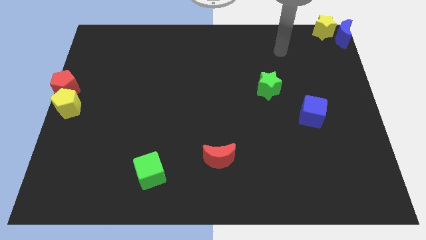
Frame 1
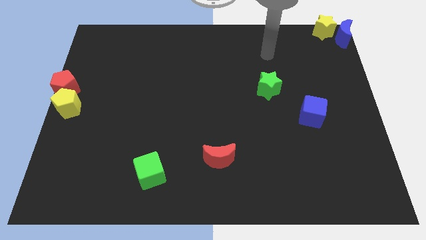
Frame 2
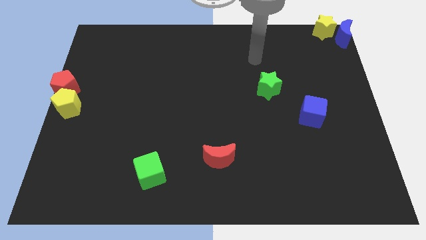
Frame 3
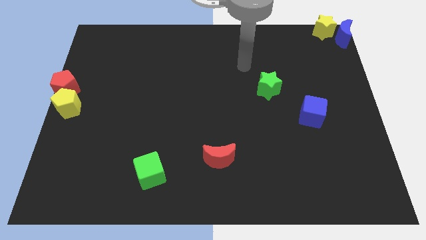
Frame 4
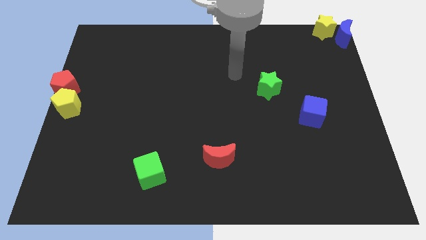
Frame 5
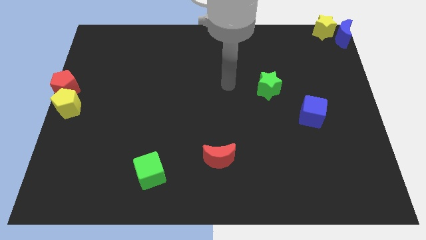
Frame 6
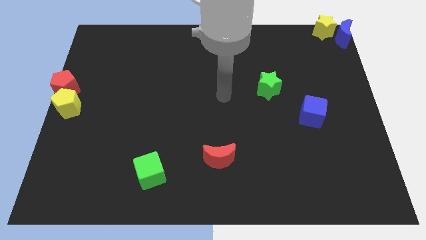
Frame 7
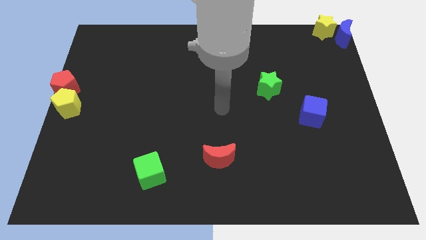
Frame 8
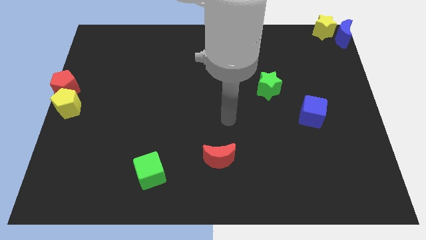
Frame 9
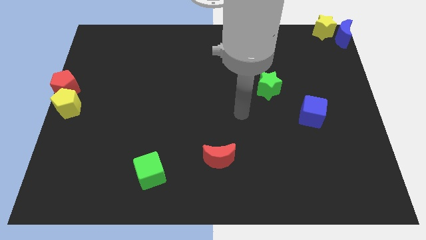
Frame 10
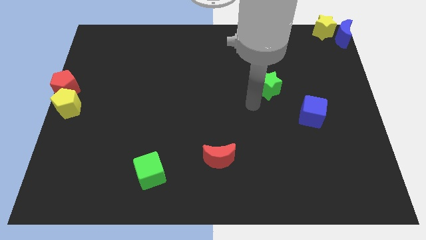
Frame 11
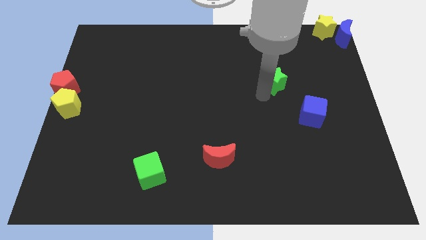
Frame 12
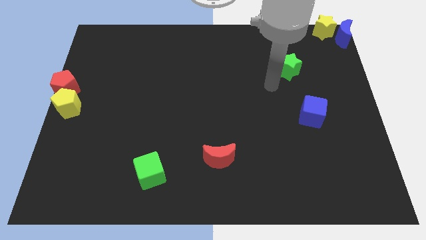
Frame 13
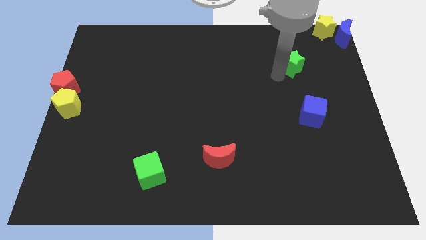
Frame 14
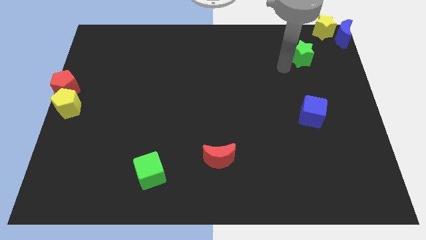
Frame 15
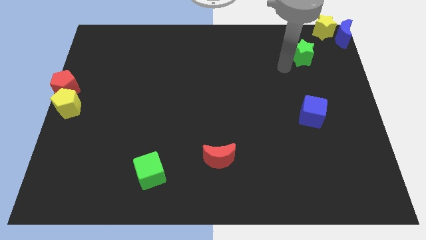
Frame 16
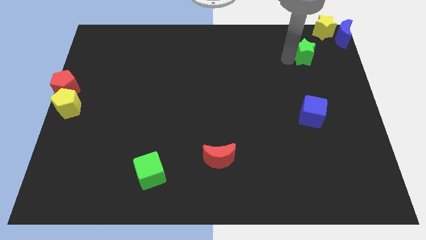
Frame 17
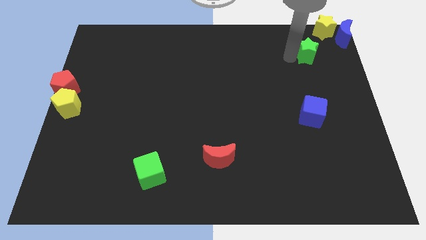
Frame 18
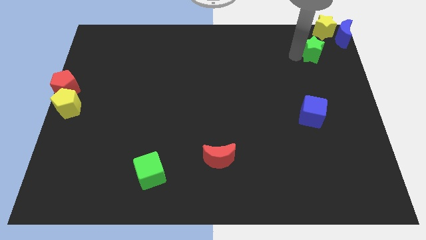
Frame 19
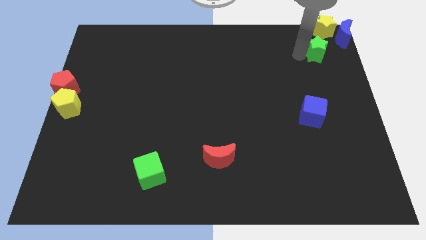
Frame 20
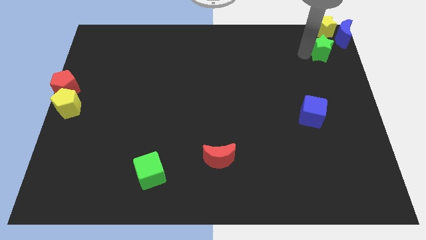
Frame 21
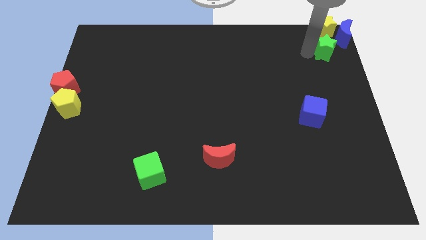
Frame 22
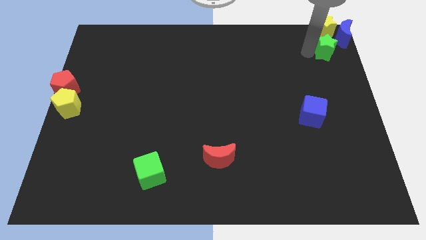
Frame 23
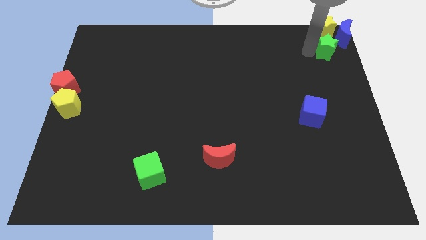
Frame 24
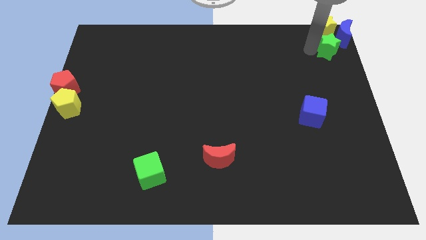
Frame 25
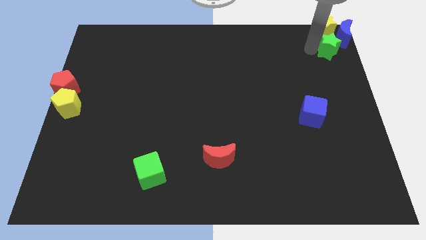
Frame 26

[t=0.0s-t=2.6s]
put the green star below the yellow star

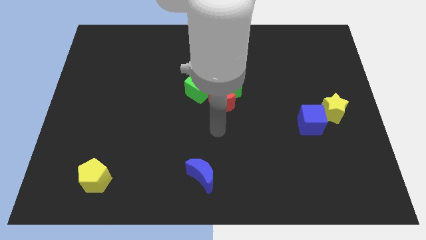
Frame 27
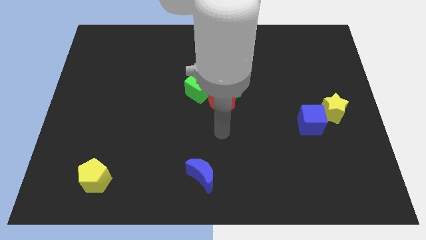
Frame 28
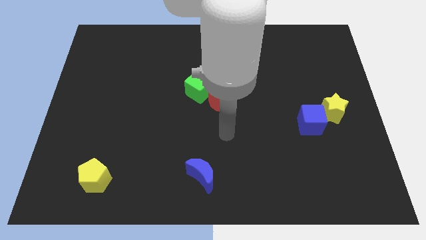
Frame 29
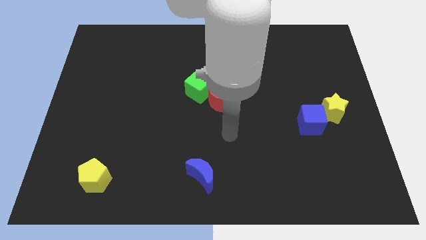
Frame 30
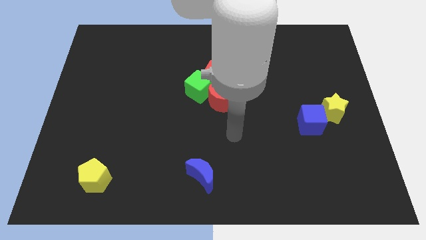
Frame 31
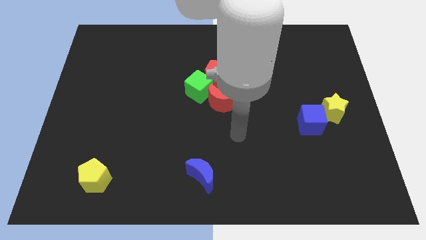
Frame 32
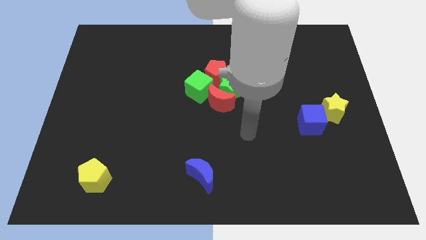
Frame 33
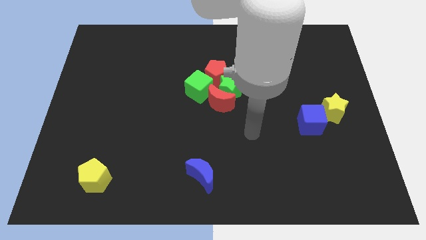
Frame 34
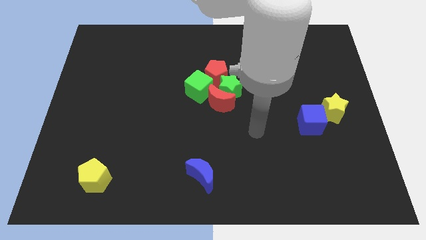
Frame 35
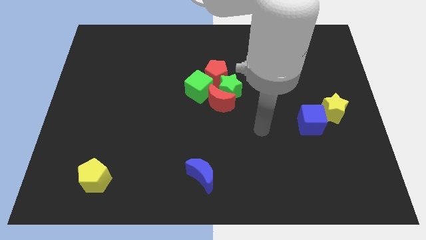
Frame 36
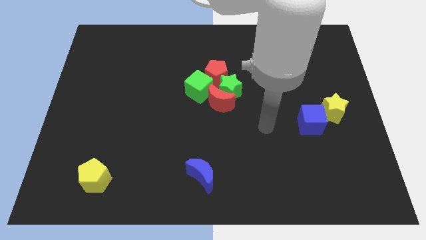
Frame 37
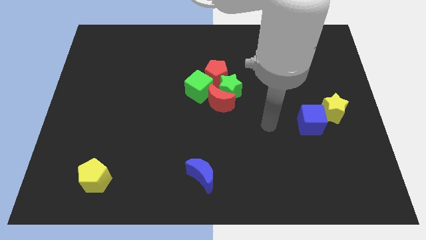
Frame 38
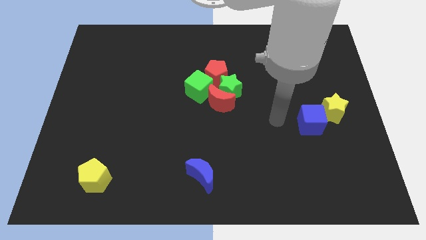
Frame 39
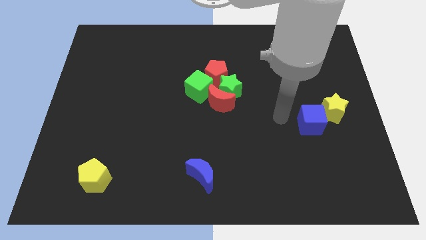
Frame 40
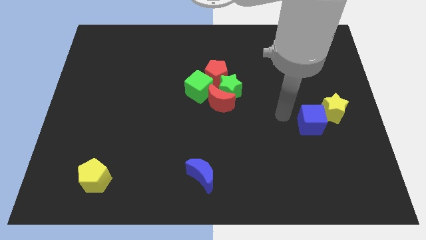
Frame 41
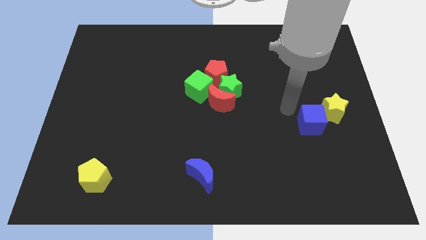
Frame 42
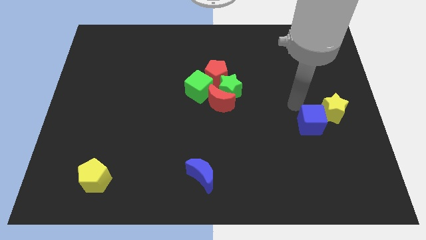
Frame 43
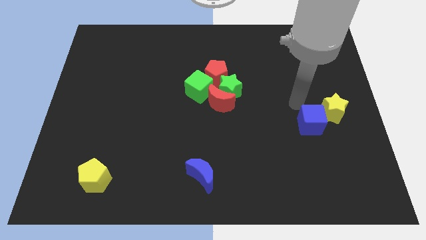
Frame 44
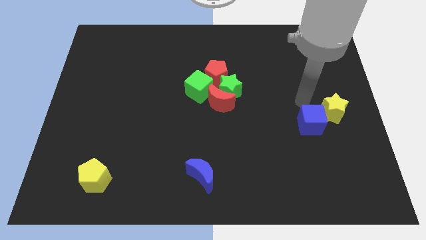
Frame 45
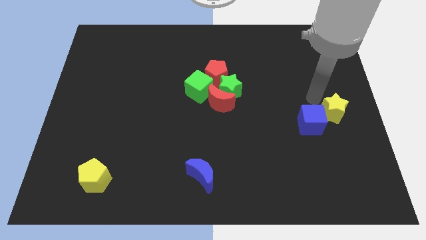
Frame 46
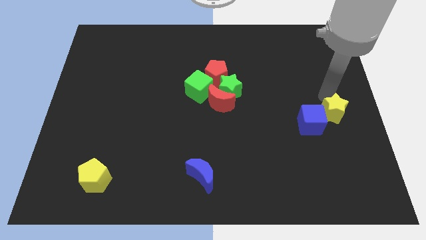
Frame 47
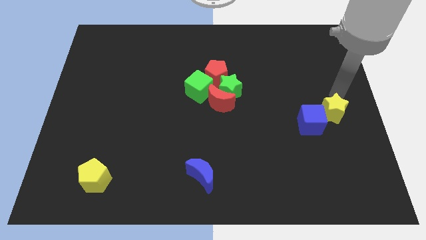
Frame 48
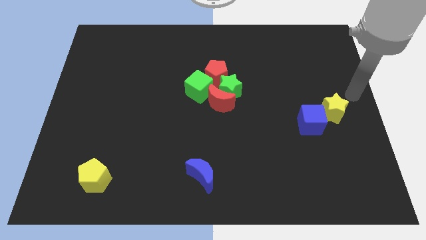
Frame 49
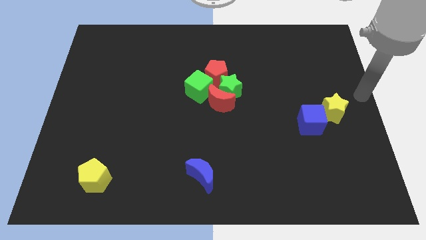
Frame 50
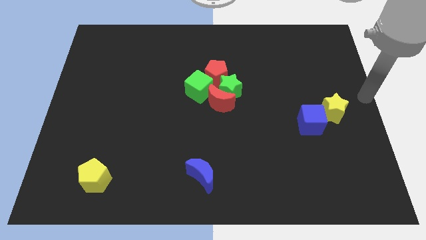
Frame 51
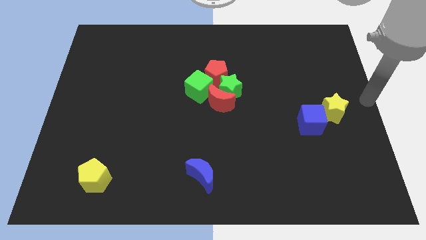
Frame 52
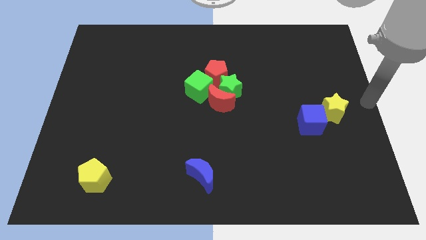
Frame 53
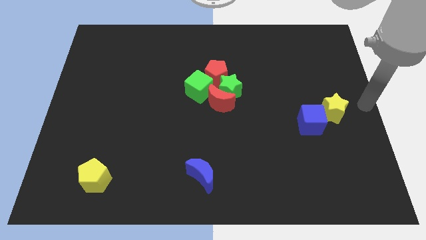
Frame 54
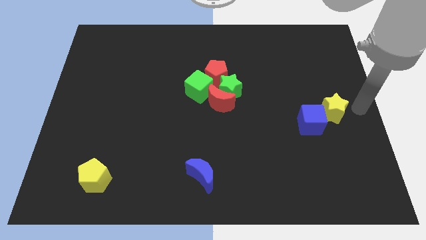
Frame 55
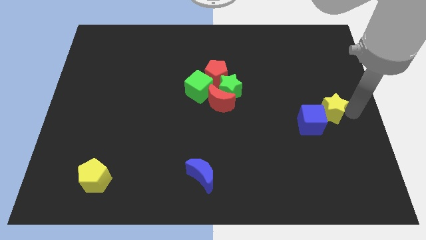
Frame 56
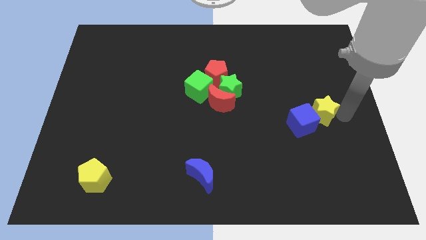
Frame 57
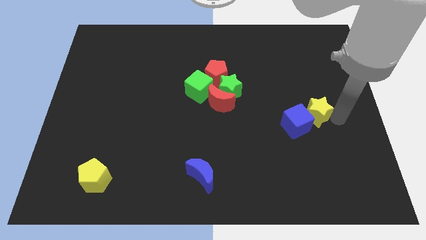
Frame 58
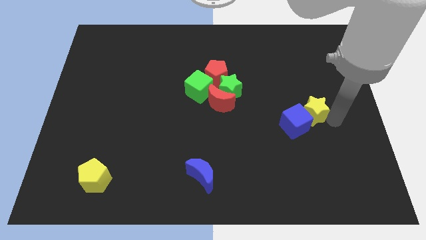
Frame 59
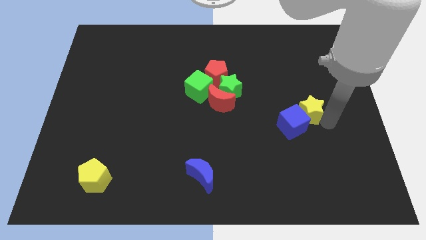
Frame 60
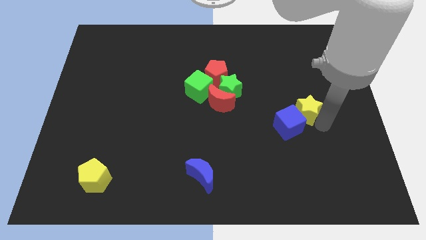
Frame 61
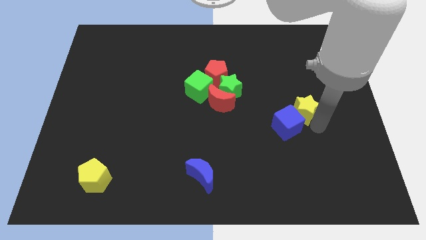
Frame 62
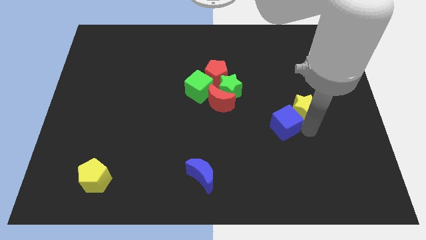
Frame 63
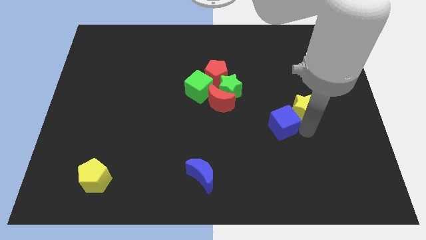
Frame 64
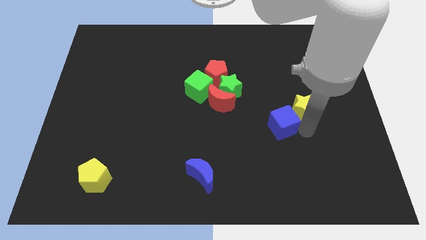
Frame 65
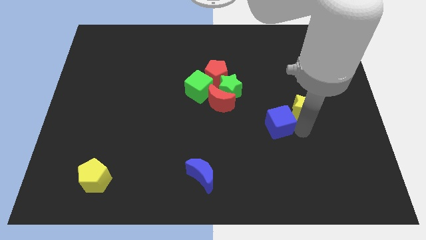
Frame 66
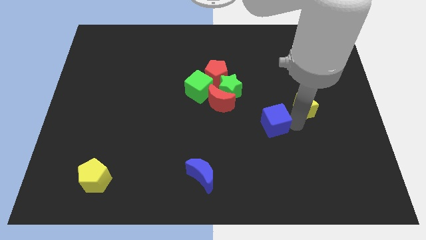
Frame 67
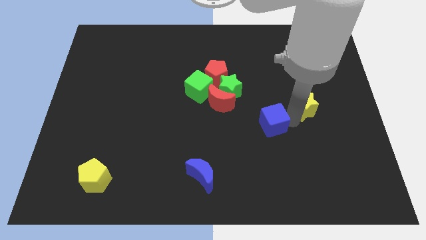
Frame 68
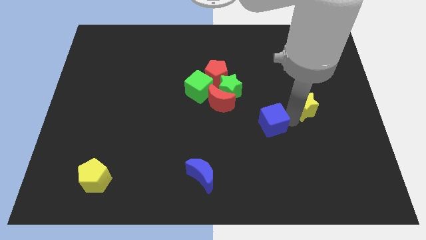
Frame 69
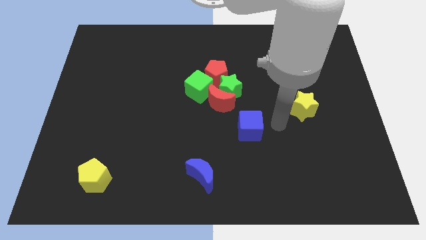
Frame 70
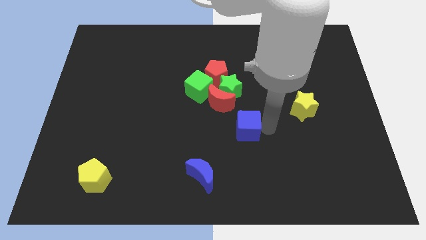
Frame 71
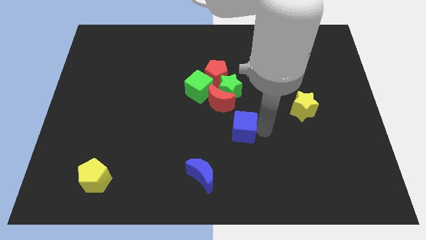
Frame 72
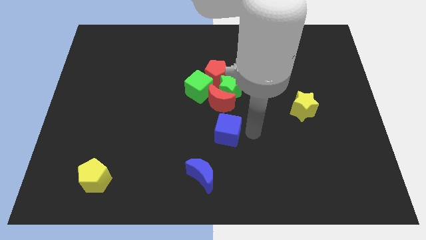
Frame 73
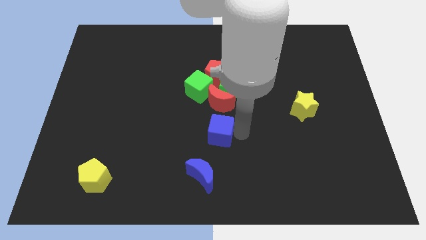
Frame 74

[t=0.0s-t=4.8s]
push the blue cube to the bottom of the red crescent

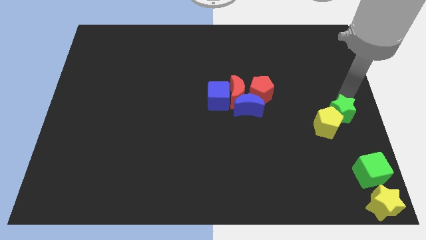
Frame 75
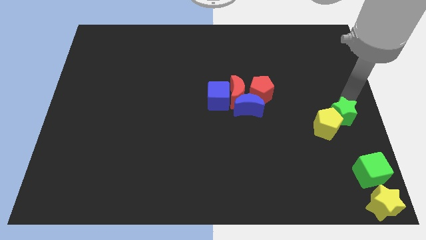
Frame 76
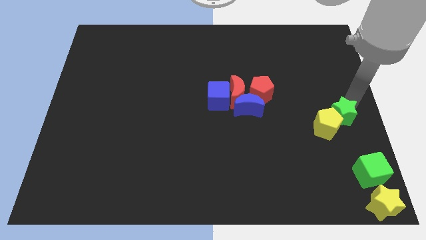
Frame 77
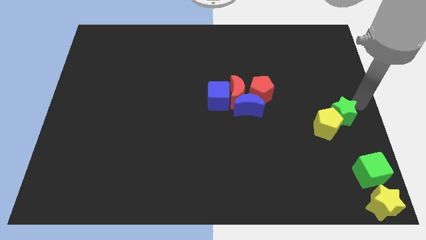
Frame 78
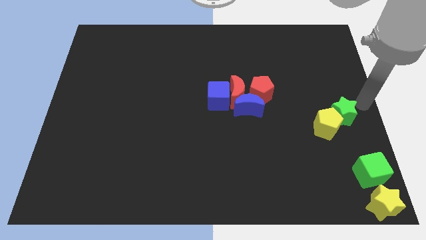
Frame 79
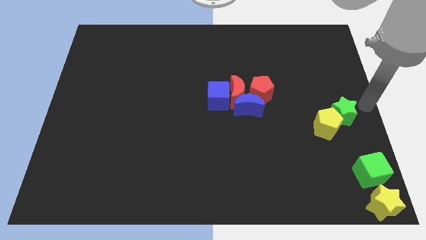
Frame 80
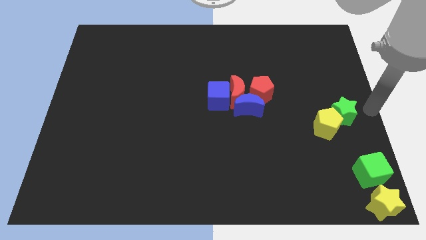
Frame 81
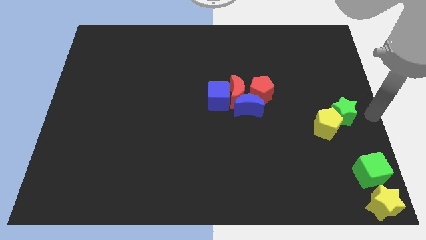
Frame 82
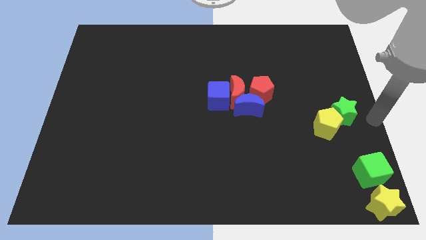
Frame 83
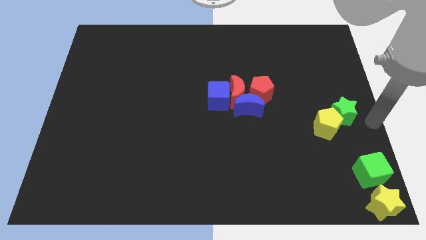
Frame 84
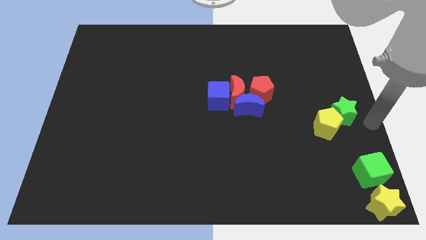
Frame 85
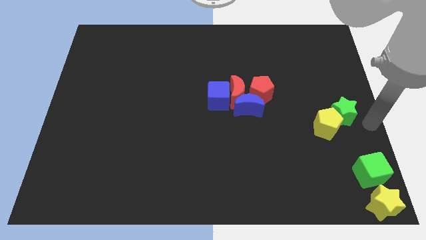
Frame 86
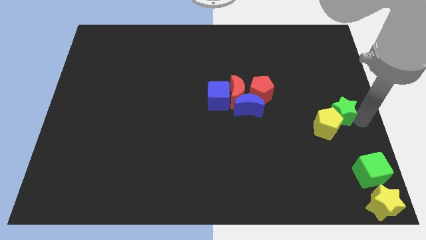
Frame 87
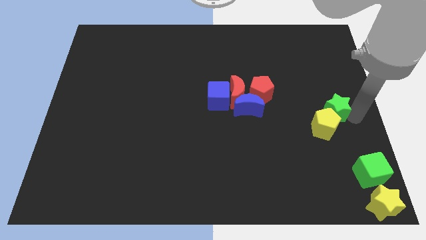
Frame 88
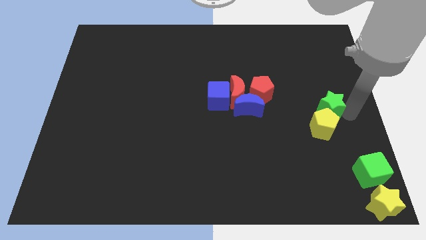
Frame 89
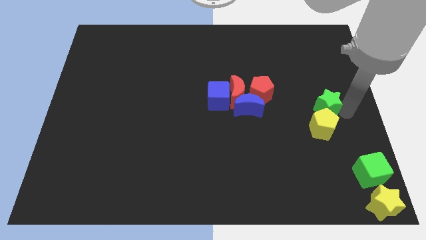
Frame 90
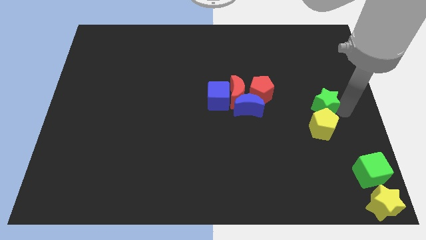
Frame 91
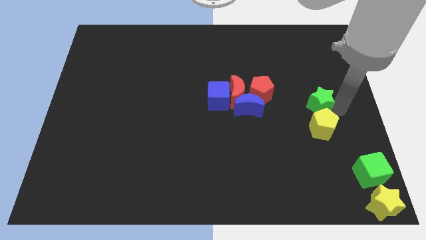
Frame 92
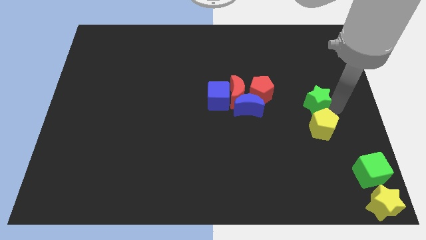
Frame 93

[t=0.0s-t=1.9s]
move the green star to the top of the yellow pentagon
